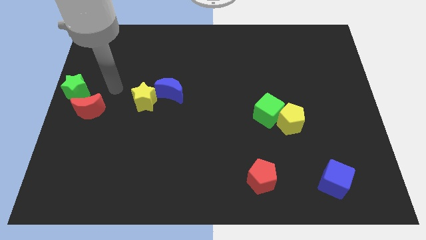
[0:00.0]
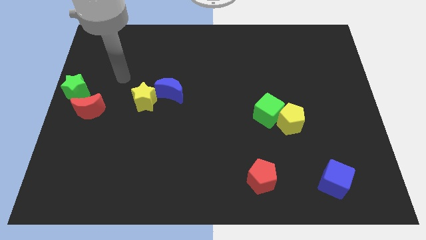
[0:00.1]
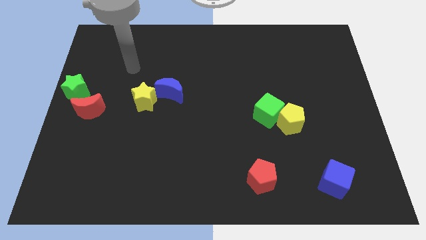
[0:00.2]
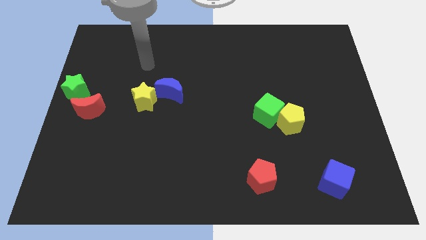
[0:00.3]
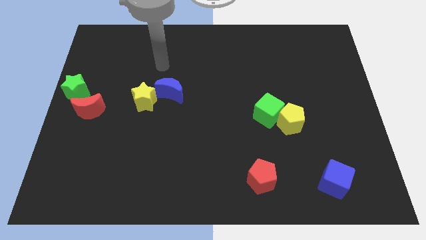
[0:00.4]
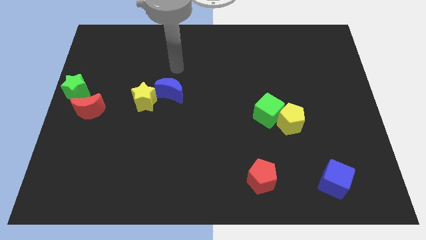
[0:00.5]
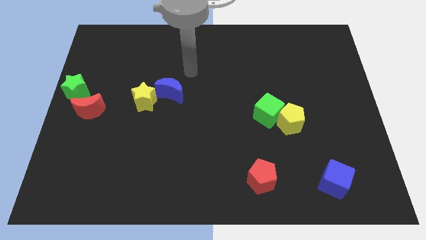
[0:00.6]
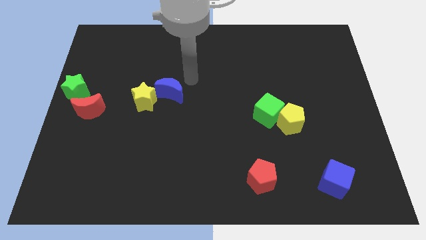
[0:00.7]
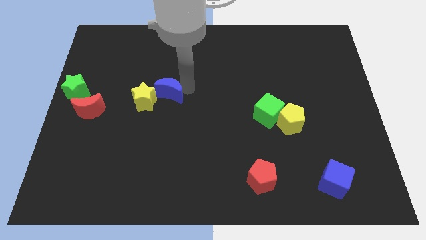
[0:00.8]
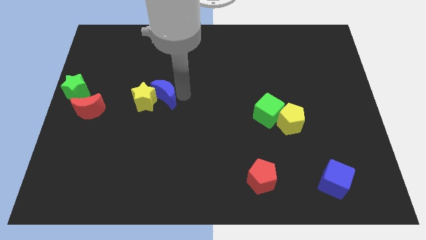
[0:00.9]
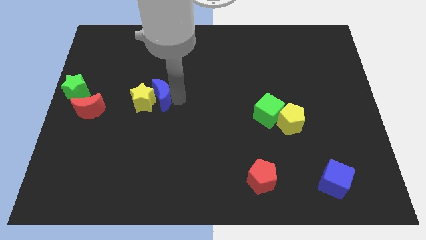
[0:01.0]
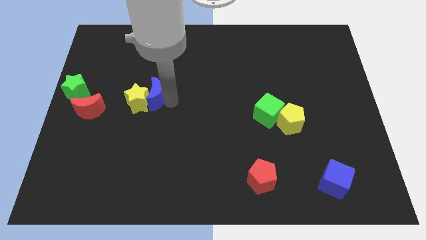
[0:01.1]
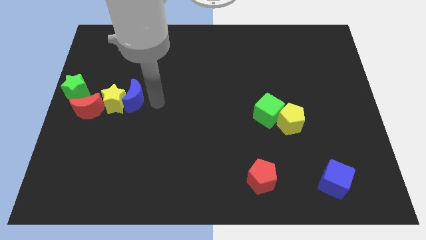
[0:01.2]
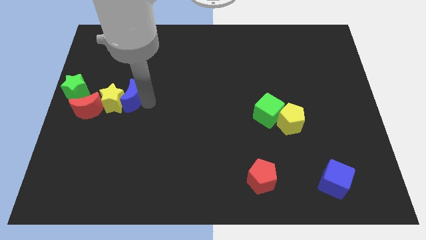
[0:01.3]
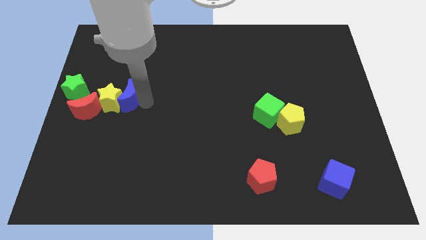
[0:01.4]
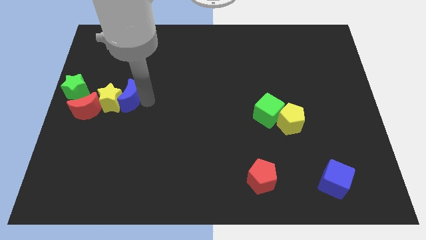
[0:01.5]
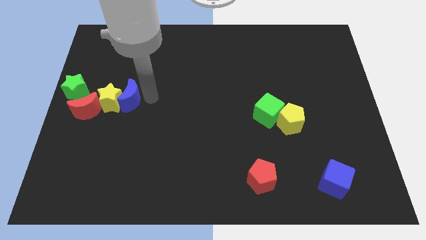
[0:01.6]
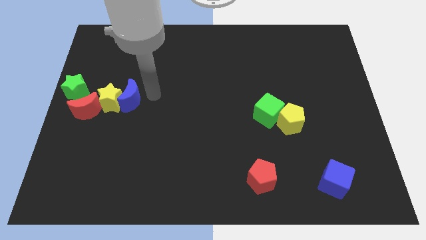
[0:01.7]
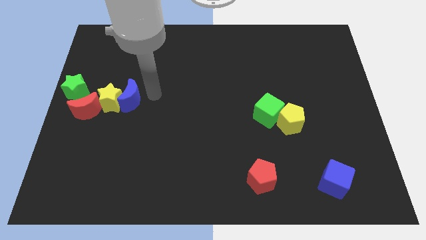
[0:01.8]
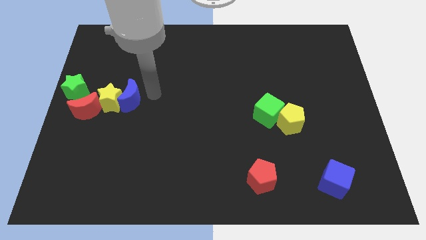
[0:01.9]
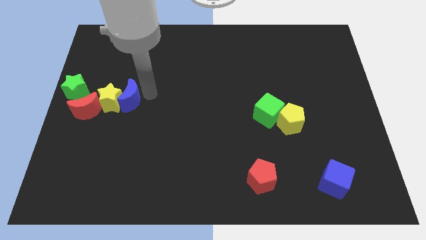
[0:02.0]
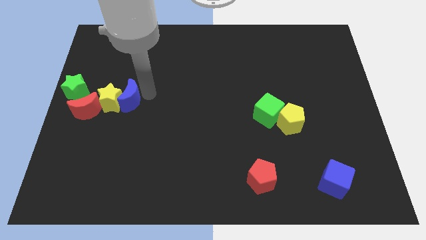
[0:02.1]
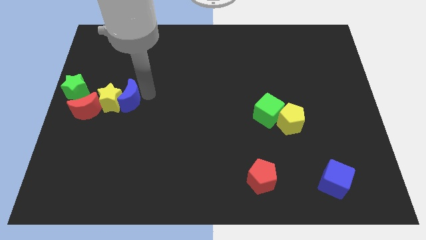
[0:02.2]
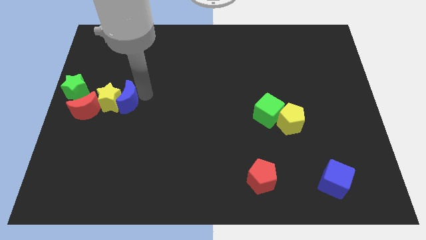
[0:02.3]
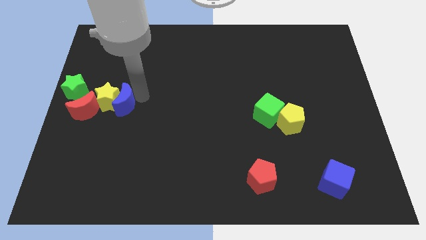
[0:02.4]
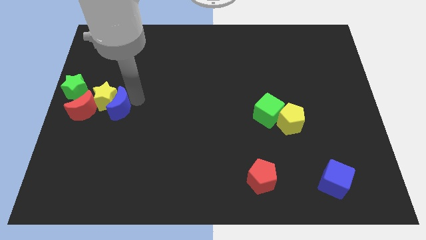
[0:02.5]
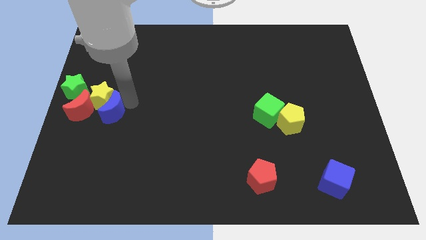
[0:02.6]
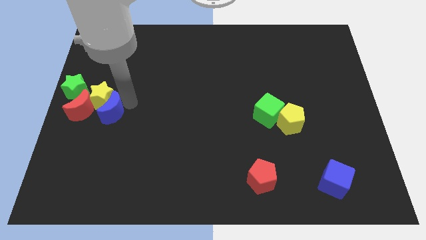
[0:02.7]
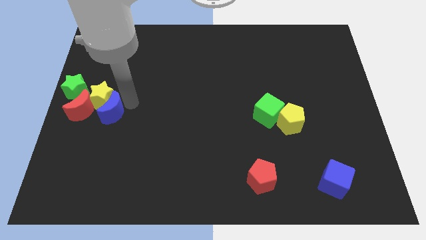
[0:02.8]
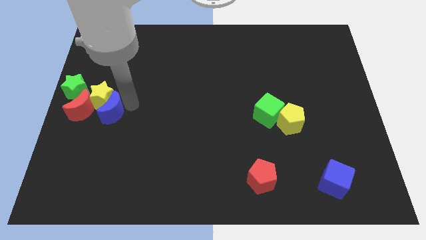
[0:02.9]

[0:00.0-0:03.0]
push yellow star and blue moon in red crescent

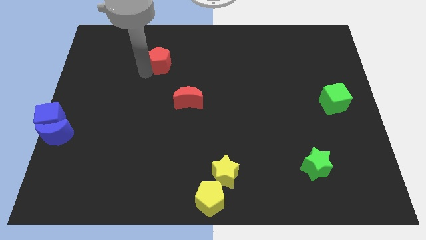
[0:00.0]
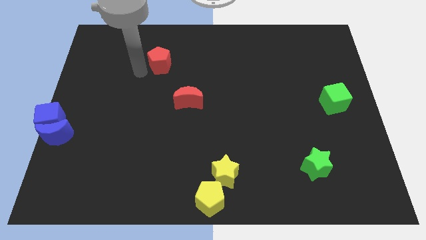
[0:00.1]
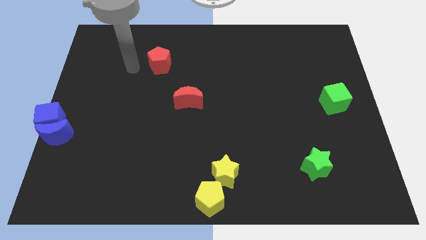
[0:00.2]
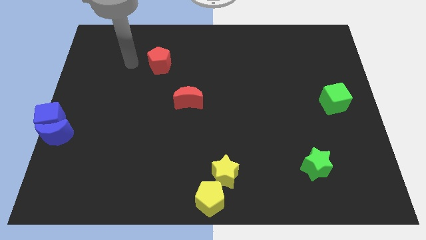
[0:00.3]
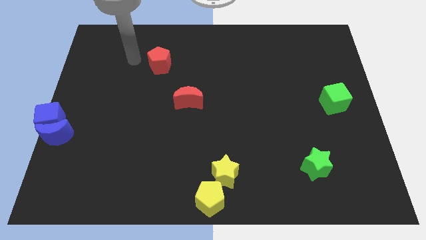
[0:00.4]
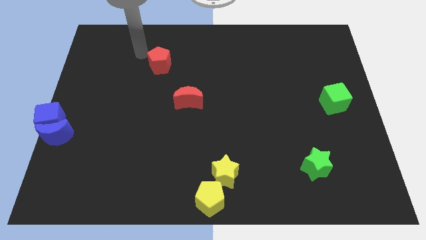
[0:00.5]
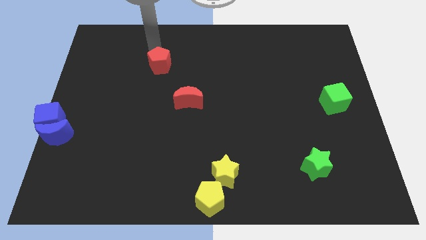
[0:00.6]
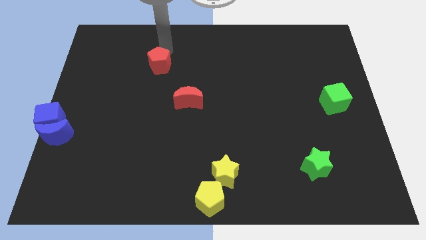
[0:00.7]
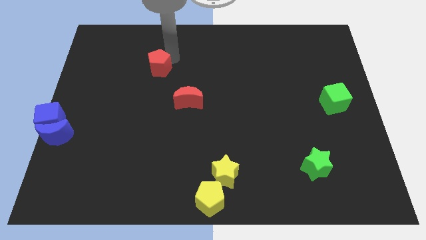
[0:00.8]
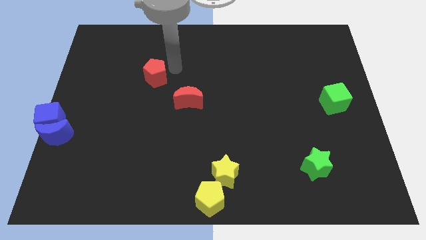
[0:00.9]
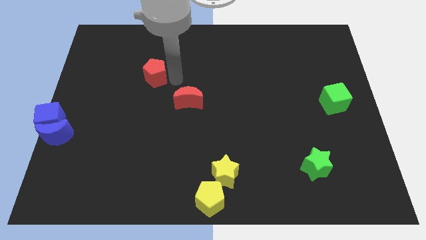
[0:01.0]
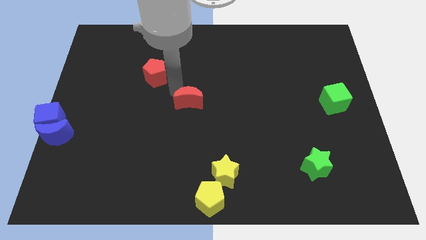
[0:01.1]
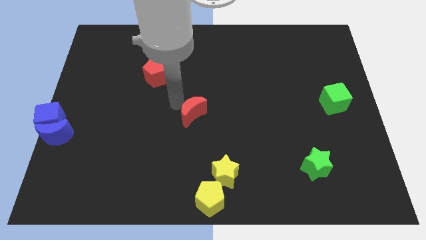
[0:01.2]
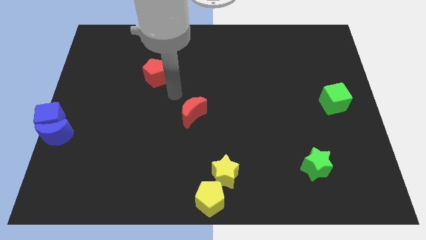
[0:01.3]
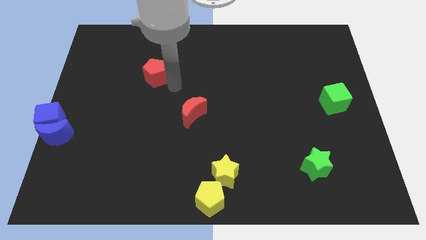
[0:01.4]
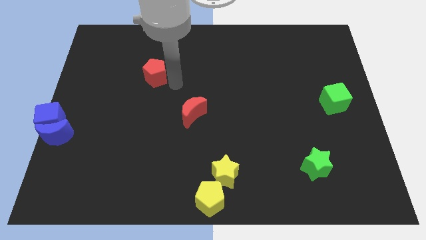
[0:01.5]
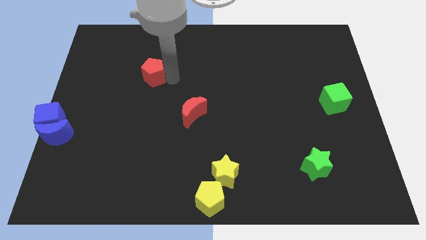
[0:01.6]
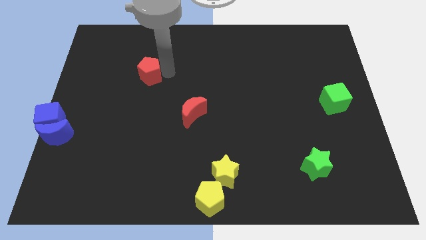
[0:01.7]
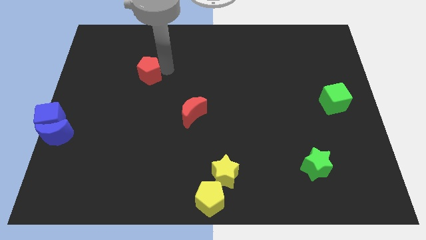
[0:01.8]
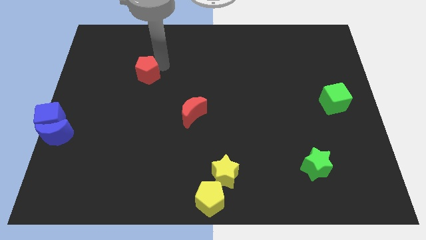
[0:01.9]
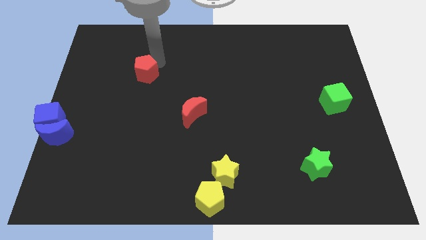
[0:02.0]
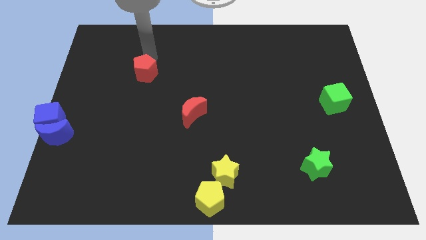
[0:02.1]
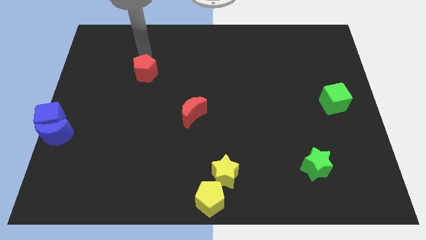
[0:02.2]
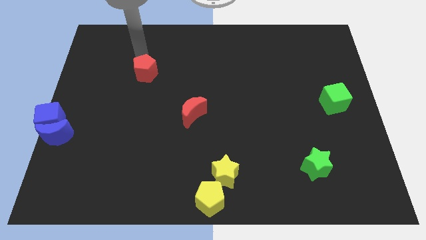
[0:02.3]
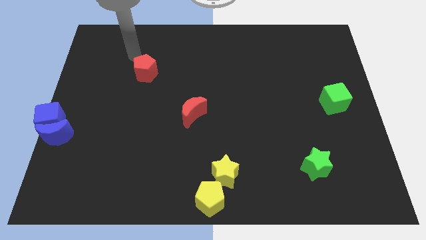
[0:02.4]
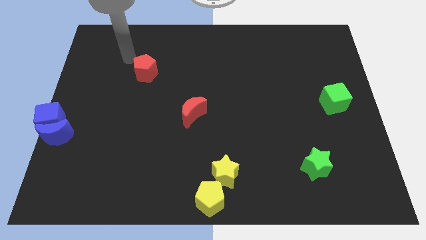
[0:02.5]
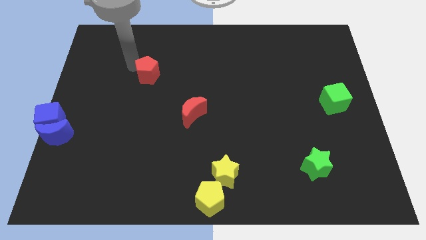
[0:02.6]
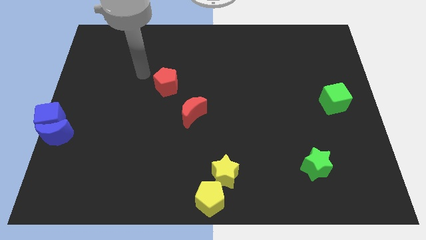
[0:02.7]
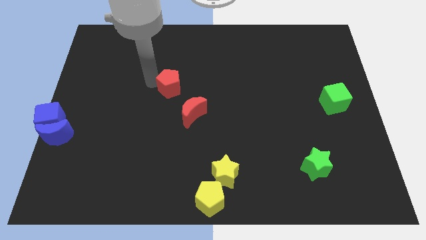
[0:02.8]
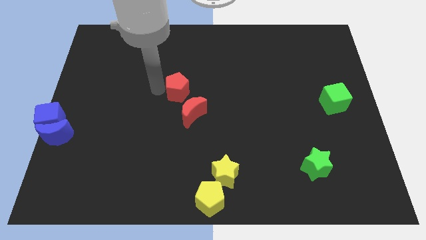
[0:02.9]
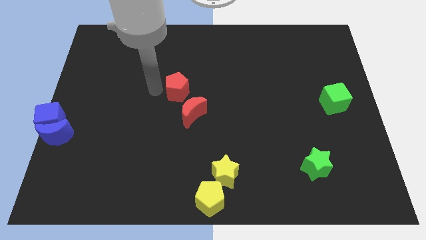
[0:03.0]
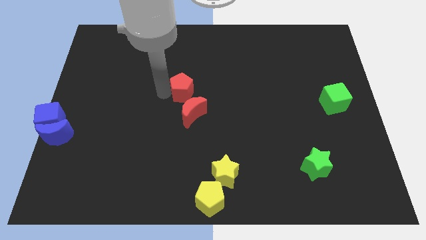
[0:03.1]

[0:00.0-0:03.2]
push the red pentagon into the red crescent

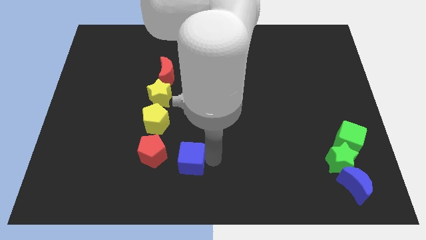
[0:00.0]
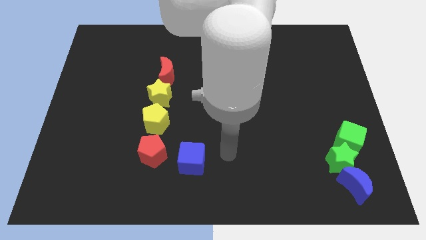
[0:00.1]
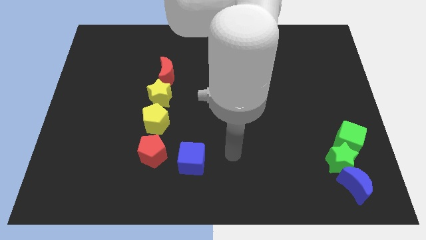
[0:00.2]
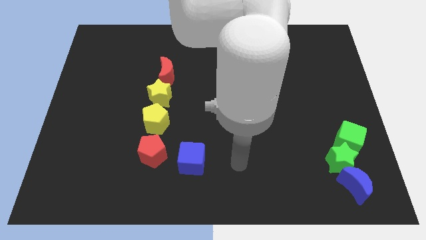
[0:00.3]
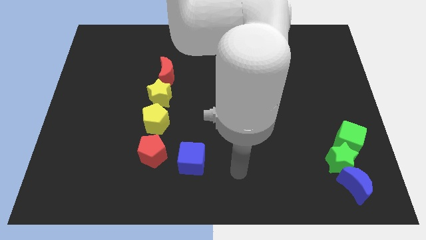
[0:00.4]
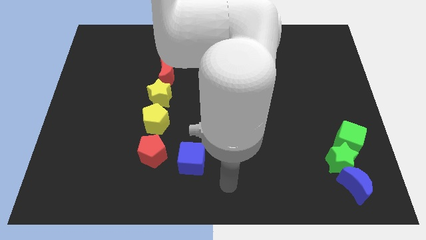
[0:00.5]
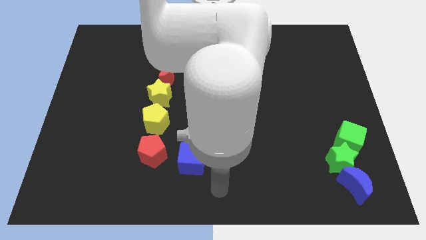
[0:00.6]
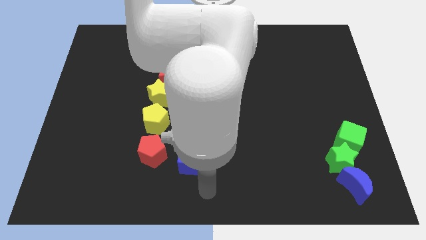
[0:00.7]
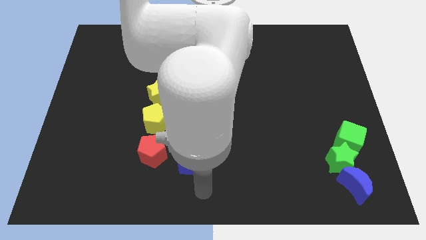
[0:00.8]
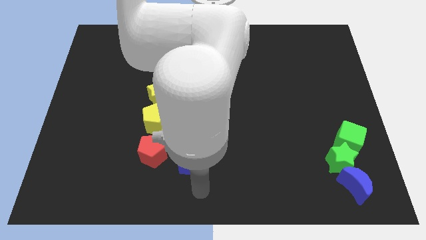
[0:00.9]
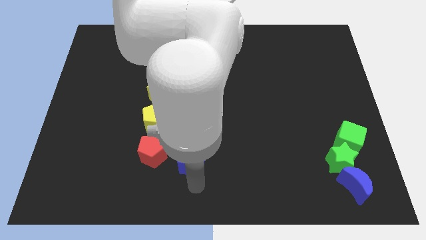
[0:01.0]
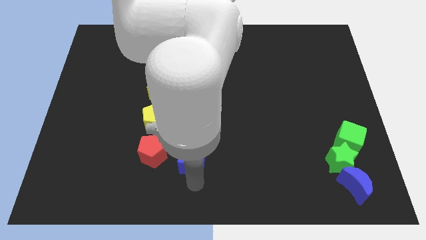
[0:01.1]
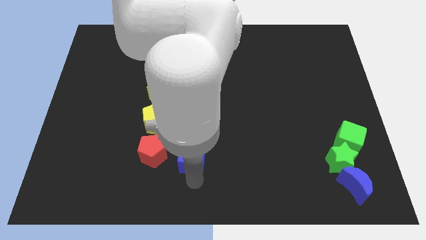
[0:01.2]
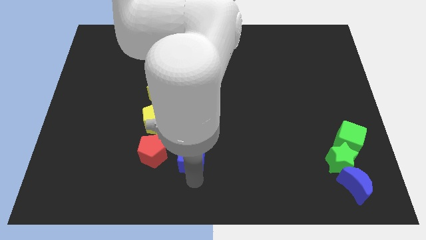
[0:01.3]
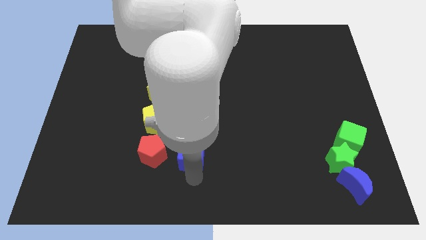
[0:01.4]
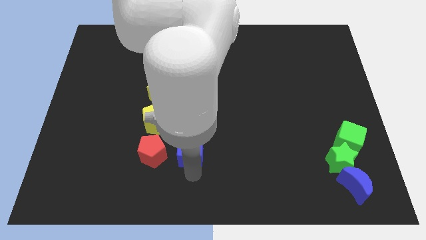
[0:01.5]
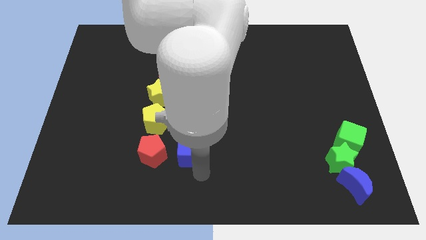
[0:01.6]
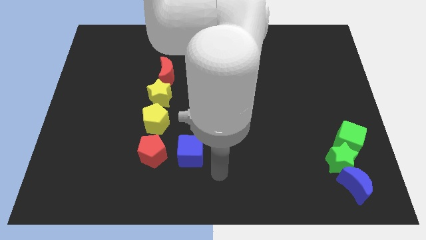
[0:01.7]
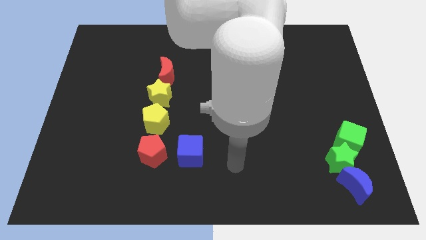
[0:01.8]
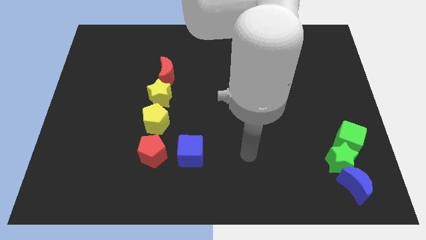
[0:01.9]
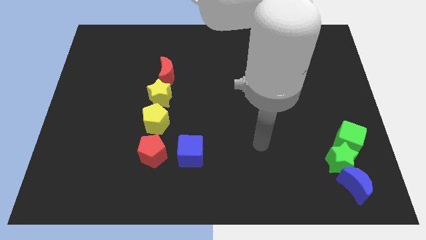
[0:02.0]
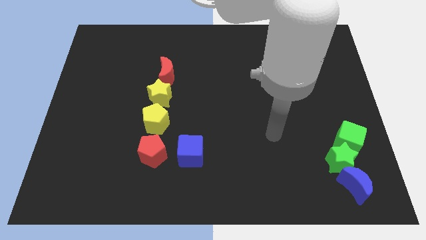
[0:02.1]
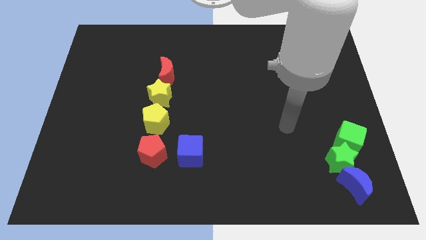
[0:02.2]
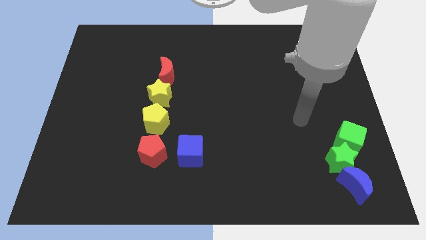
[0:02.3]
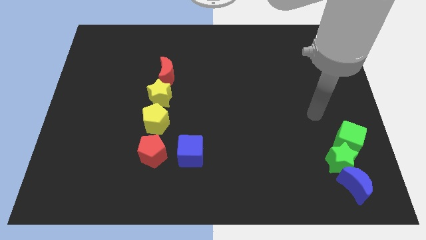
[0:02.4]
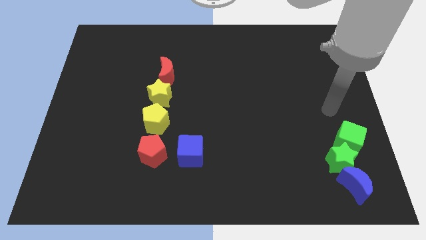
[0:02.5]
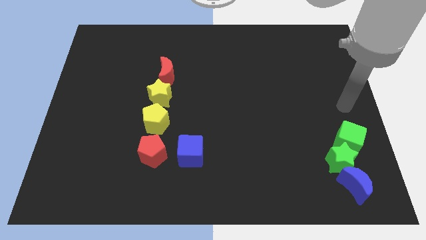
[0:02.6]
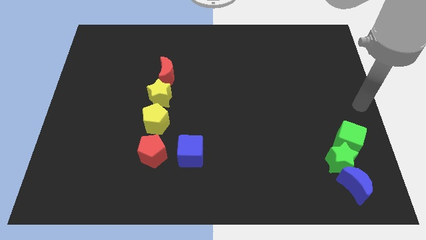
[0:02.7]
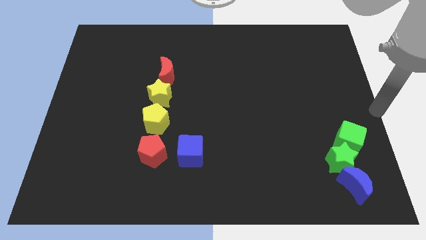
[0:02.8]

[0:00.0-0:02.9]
push blue cube slightly up
